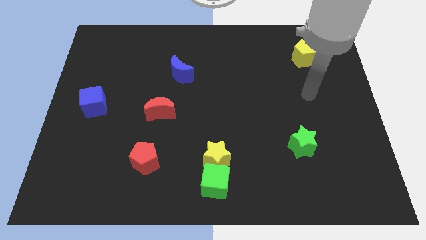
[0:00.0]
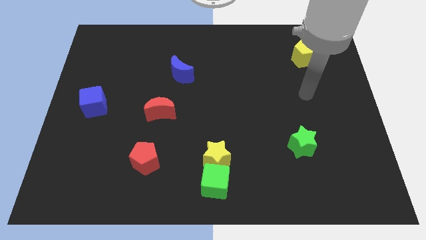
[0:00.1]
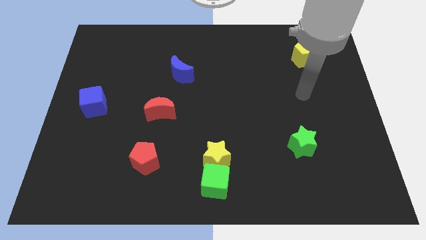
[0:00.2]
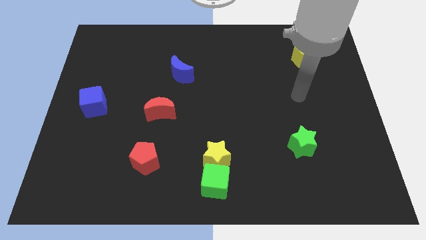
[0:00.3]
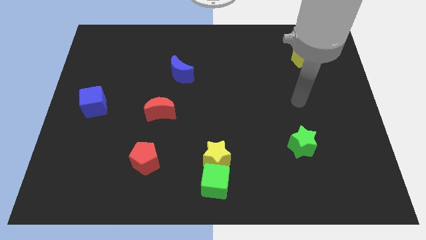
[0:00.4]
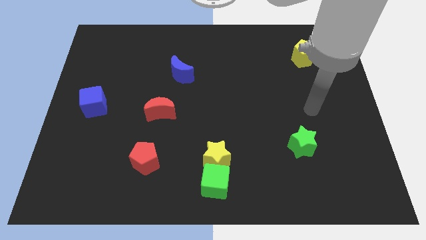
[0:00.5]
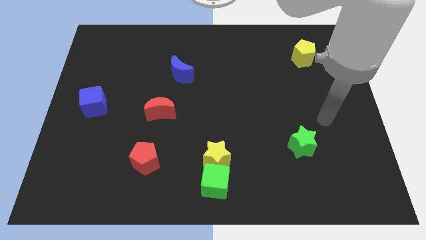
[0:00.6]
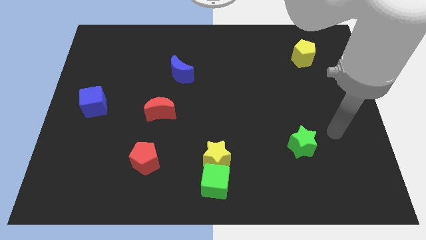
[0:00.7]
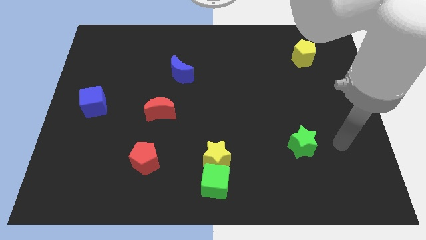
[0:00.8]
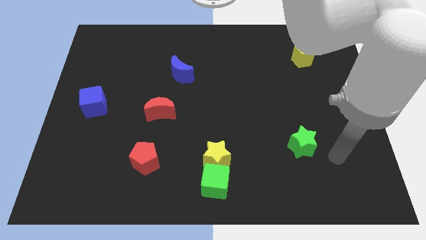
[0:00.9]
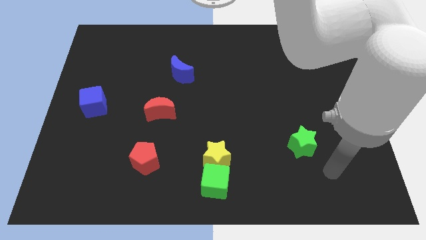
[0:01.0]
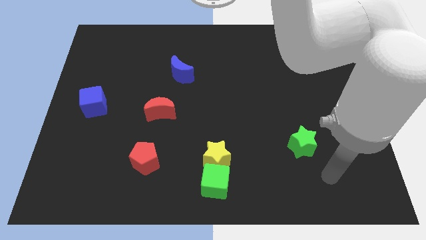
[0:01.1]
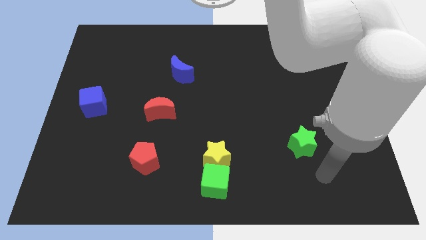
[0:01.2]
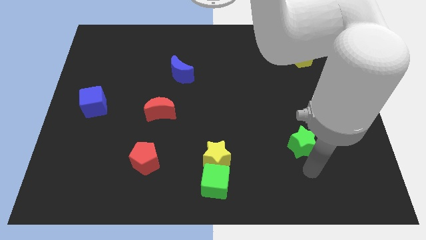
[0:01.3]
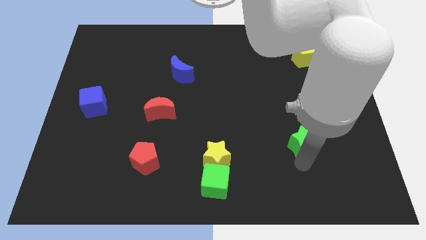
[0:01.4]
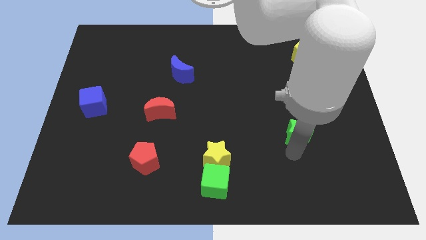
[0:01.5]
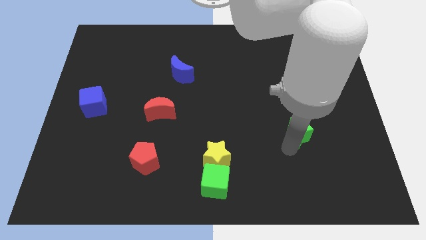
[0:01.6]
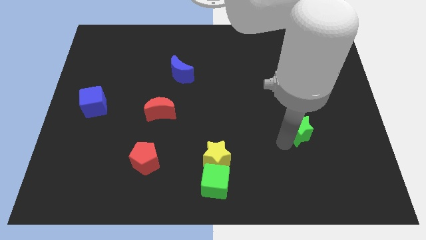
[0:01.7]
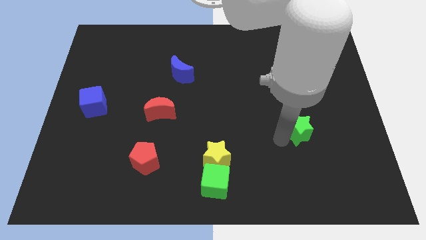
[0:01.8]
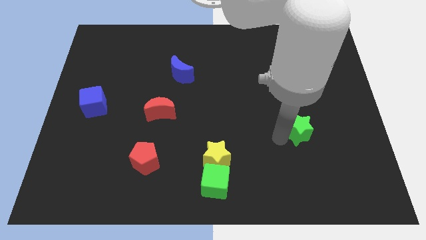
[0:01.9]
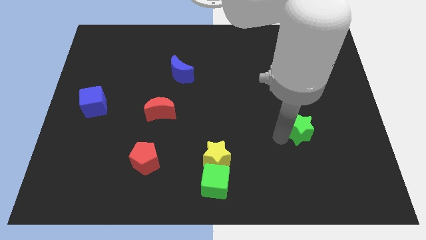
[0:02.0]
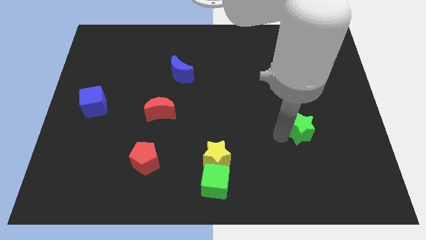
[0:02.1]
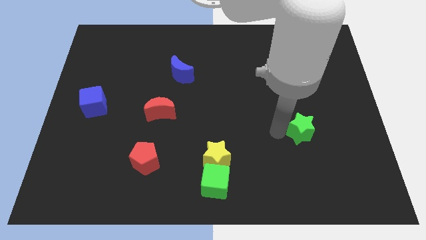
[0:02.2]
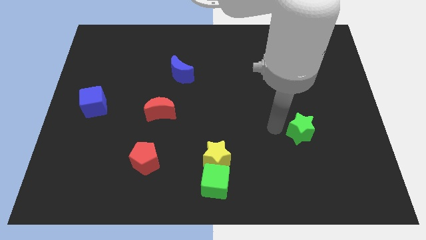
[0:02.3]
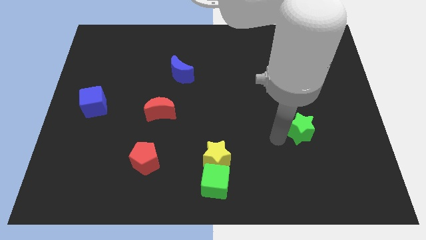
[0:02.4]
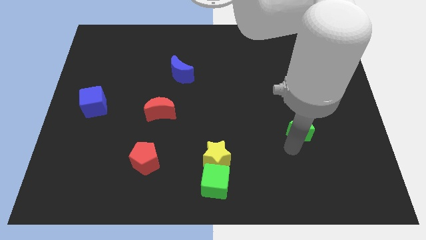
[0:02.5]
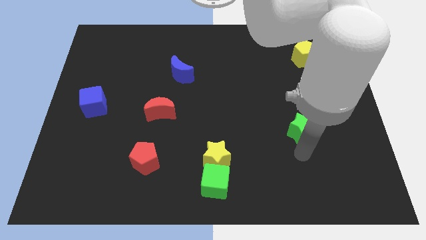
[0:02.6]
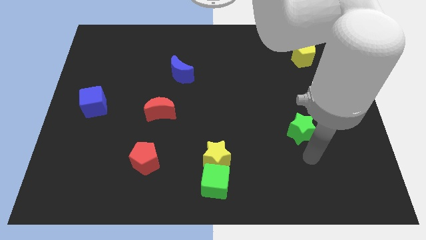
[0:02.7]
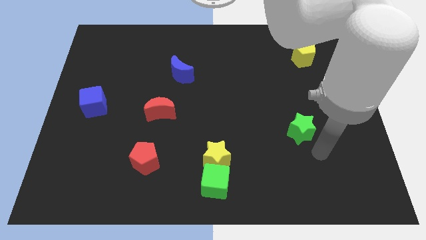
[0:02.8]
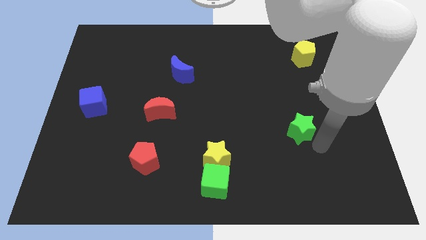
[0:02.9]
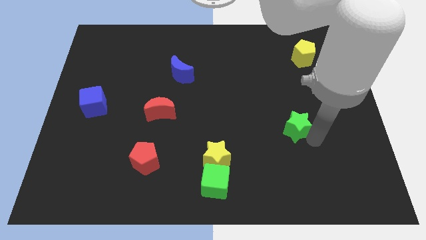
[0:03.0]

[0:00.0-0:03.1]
move green star towards the red moon

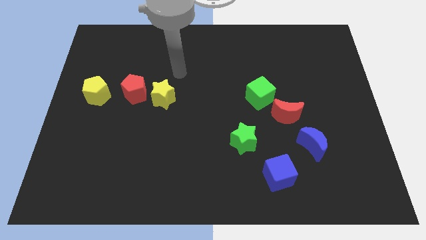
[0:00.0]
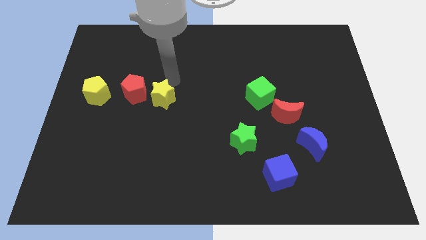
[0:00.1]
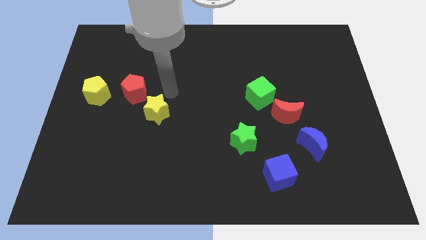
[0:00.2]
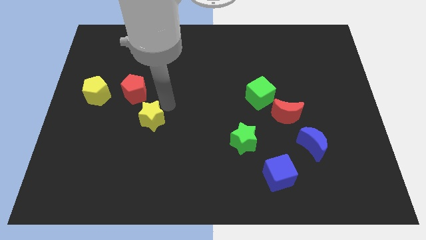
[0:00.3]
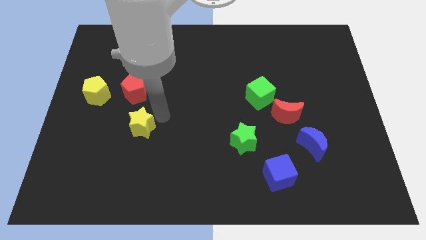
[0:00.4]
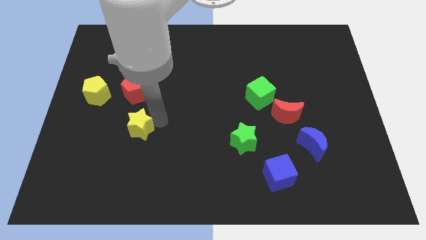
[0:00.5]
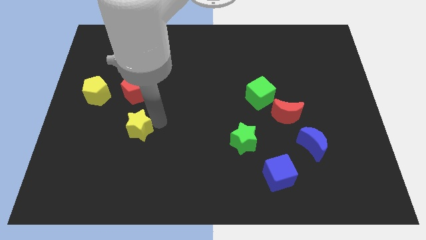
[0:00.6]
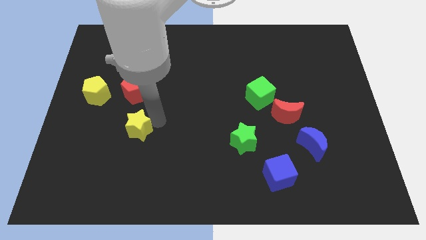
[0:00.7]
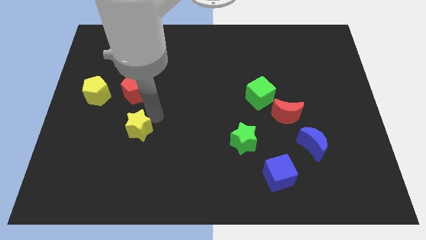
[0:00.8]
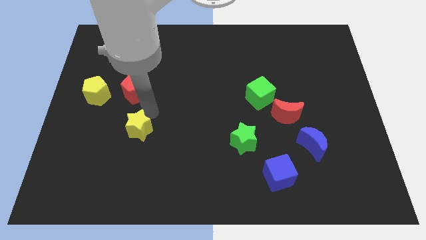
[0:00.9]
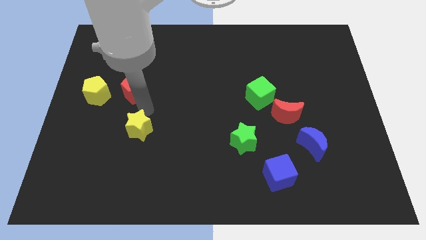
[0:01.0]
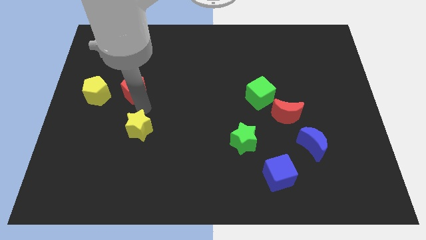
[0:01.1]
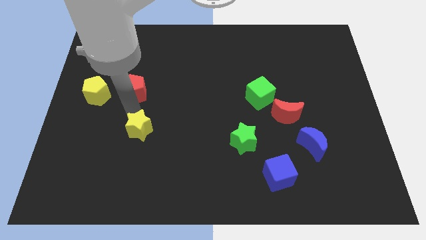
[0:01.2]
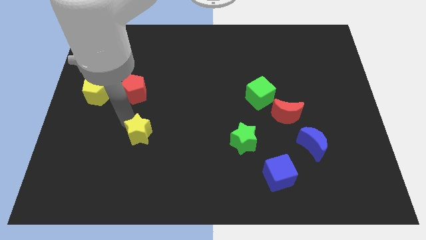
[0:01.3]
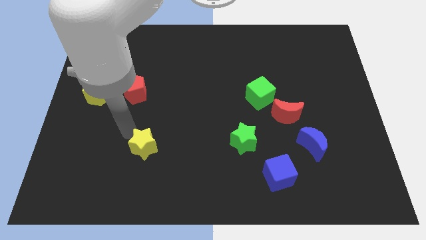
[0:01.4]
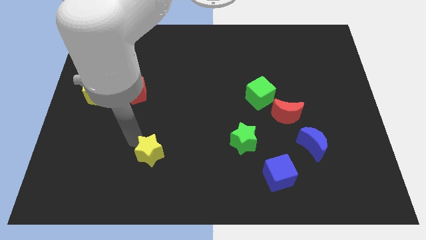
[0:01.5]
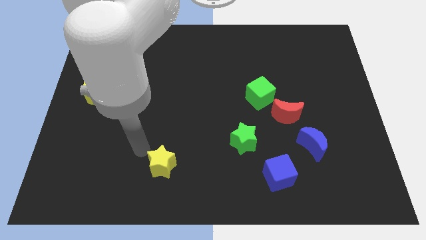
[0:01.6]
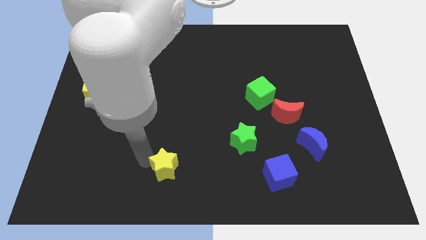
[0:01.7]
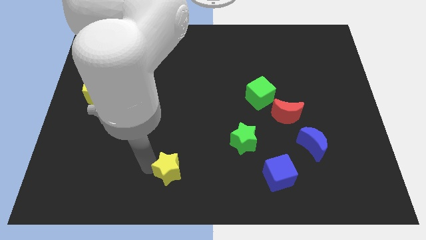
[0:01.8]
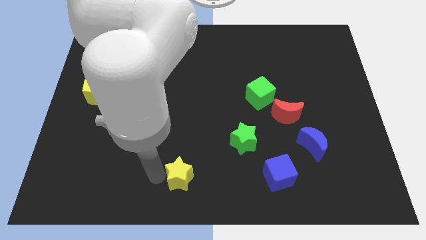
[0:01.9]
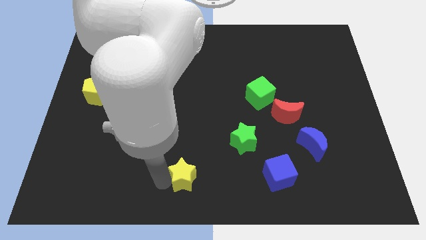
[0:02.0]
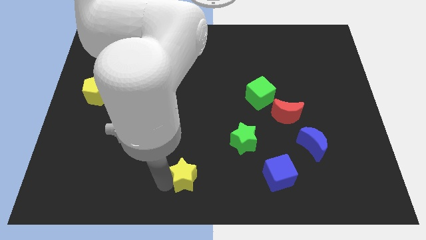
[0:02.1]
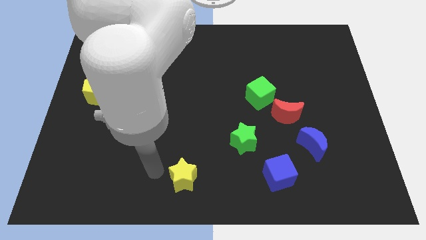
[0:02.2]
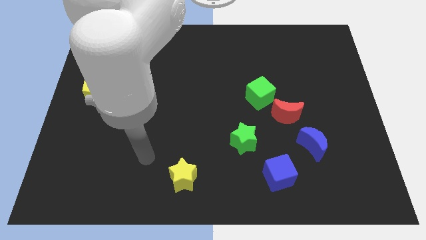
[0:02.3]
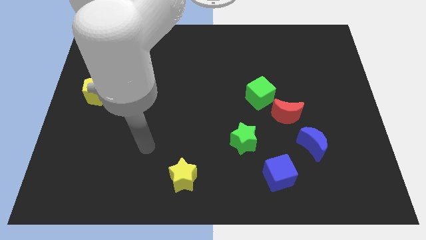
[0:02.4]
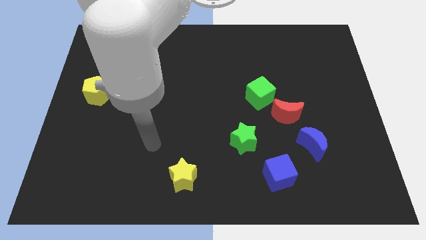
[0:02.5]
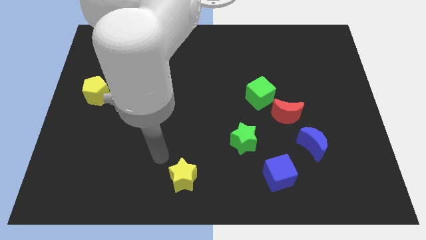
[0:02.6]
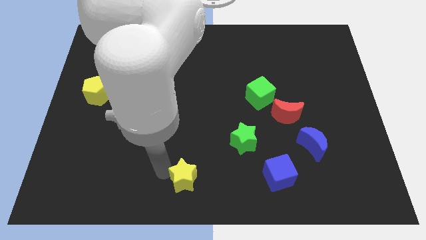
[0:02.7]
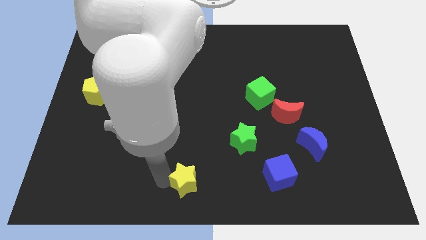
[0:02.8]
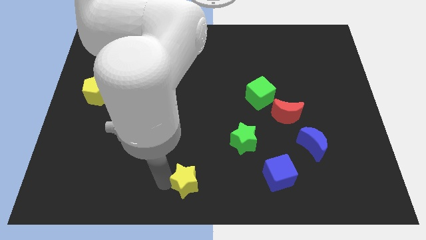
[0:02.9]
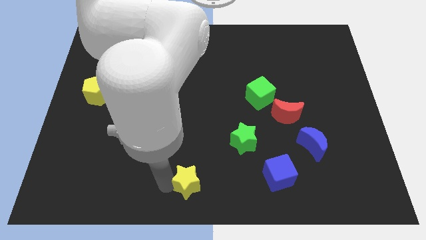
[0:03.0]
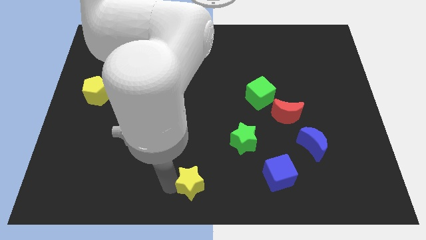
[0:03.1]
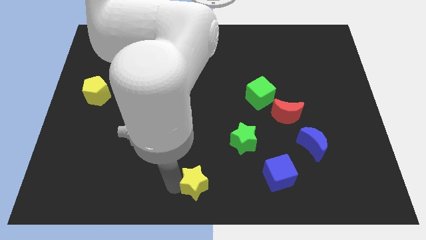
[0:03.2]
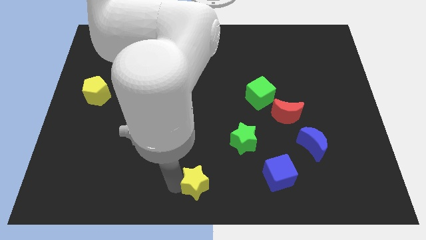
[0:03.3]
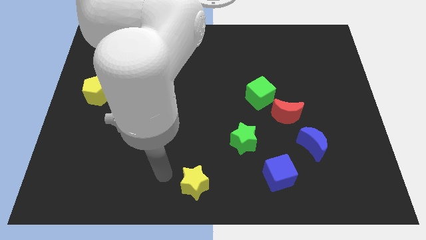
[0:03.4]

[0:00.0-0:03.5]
push the yellow star to the bottom center

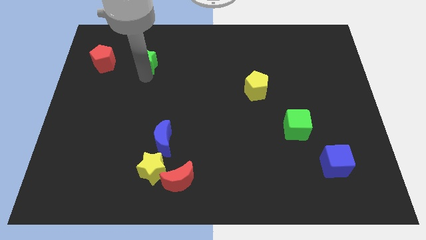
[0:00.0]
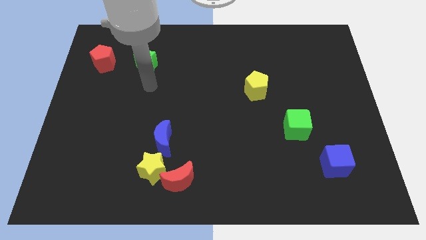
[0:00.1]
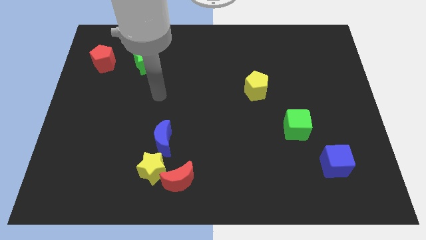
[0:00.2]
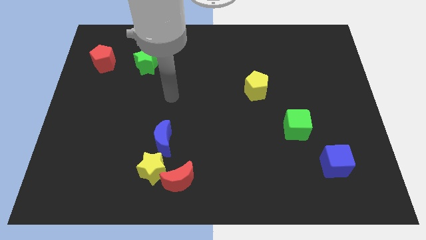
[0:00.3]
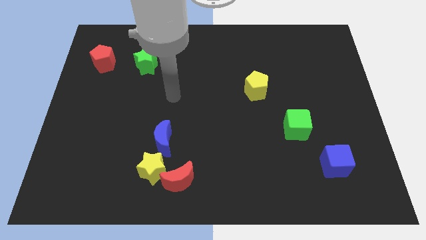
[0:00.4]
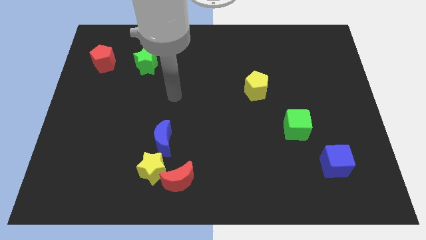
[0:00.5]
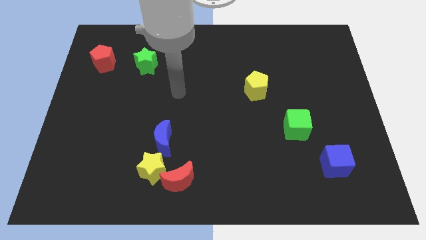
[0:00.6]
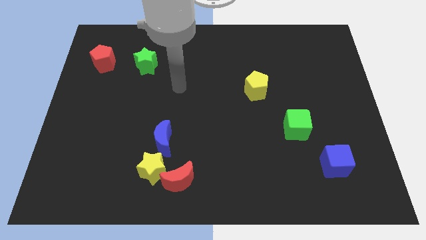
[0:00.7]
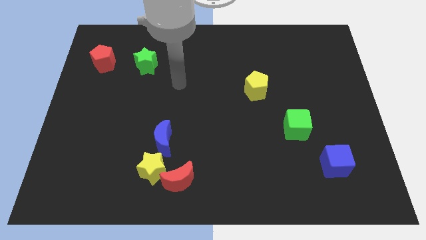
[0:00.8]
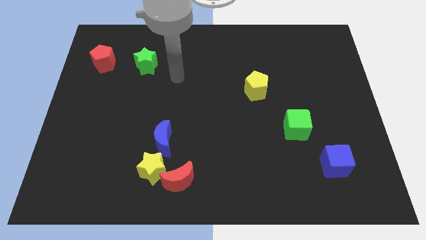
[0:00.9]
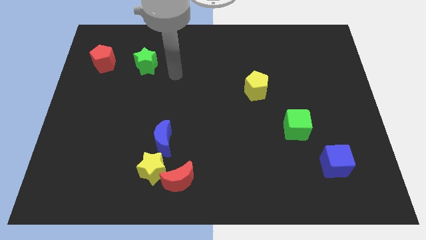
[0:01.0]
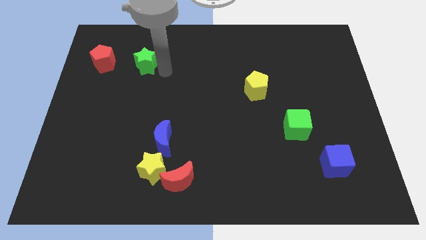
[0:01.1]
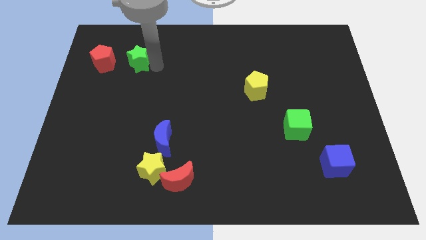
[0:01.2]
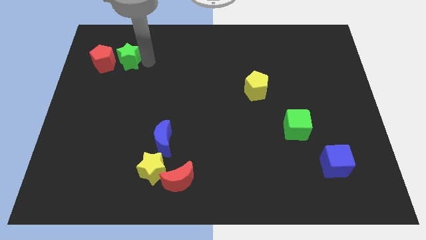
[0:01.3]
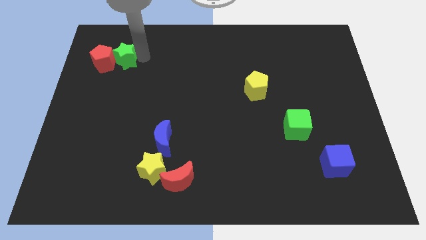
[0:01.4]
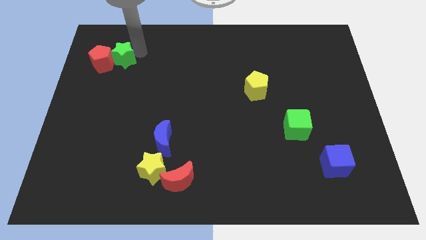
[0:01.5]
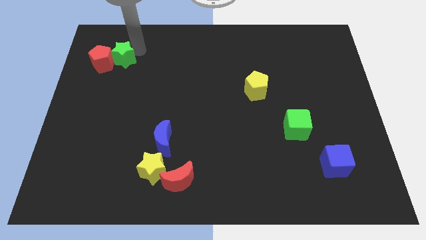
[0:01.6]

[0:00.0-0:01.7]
push green star into the red pentagon

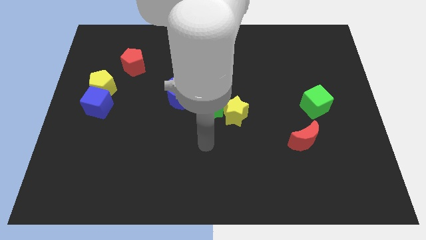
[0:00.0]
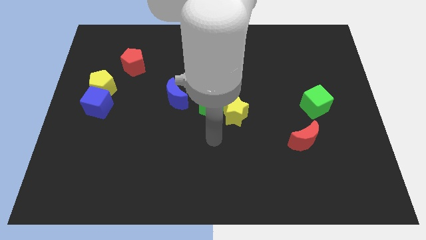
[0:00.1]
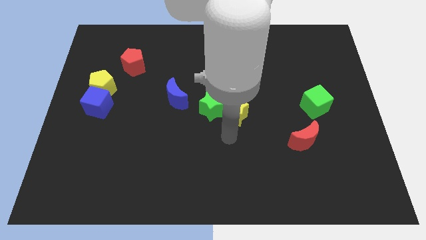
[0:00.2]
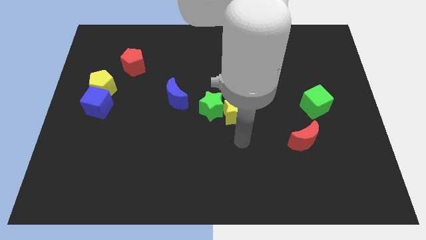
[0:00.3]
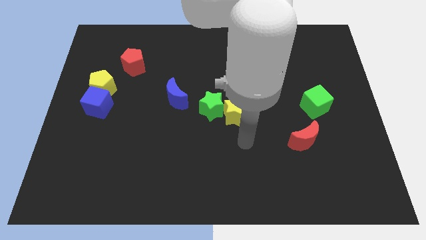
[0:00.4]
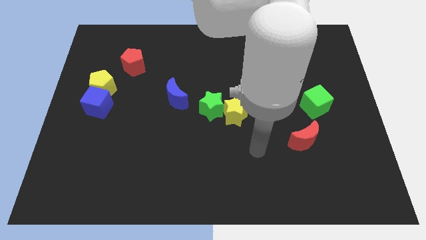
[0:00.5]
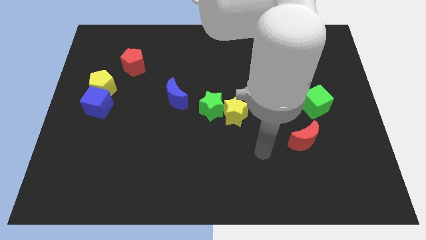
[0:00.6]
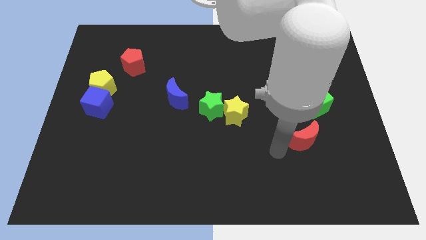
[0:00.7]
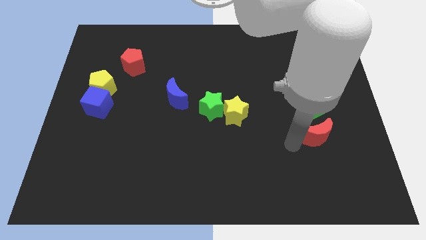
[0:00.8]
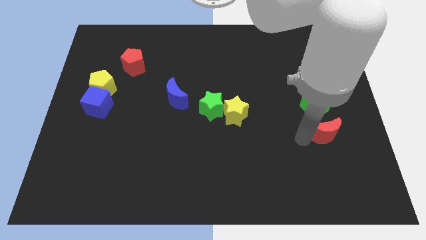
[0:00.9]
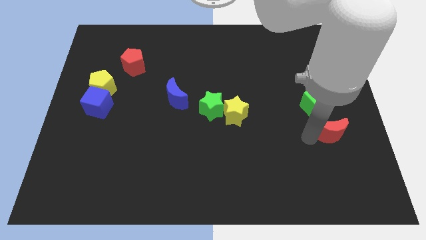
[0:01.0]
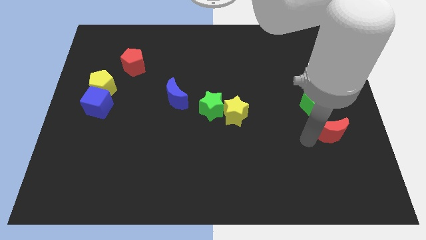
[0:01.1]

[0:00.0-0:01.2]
push the red crescent towards right
